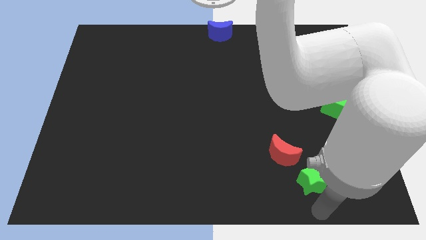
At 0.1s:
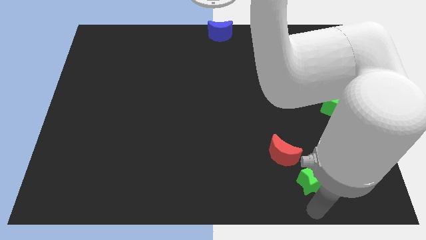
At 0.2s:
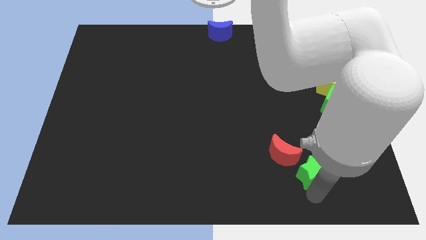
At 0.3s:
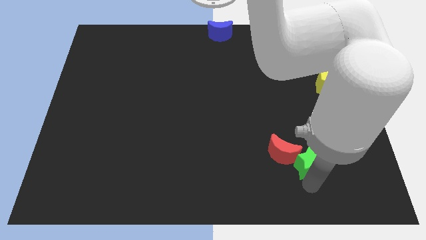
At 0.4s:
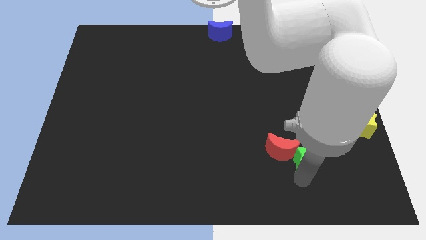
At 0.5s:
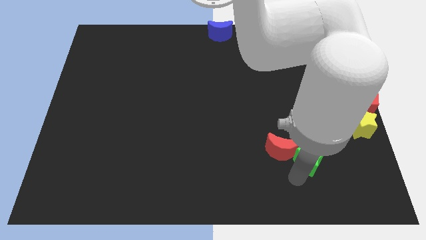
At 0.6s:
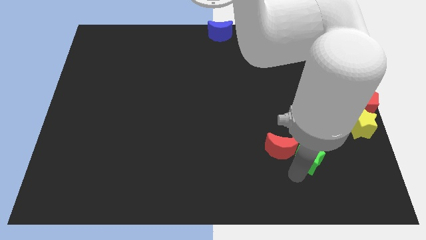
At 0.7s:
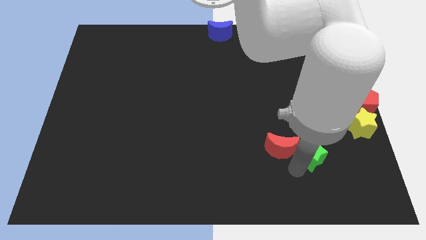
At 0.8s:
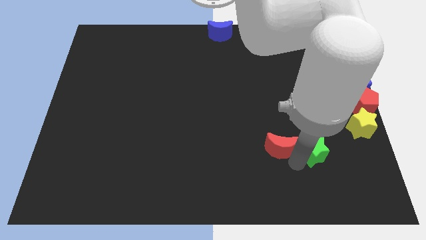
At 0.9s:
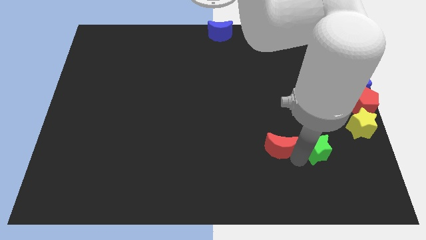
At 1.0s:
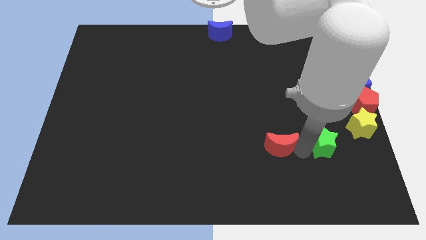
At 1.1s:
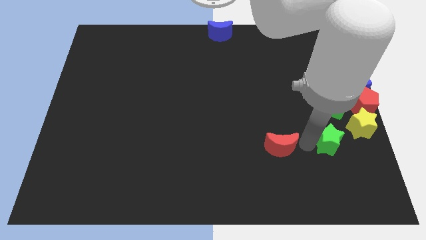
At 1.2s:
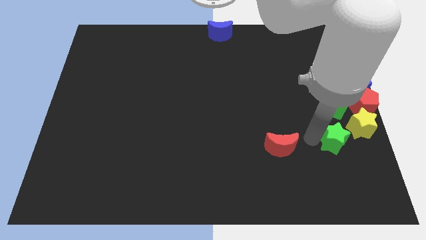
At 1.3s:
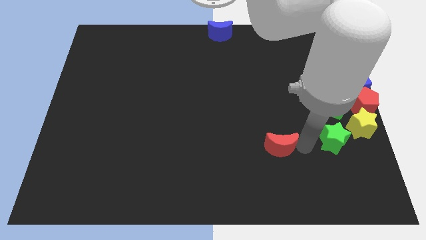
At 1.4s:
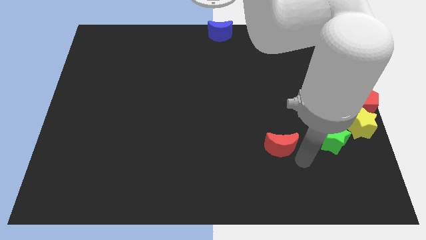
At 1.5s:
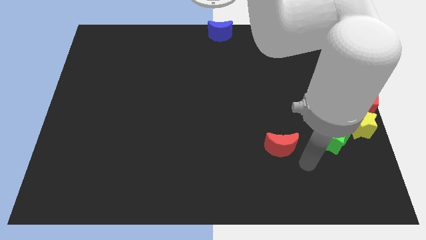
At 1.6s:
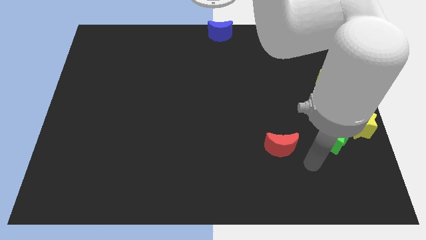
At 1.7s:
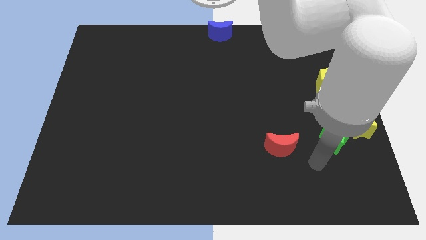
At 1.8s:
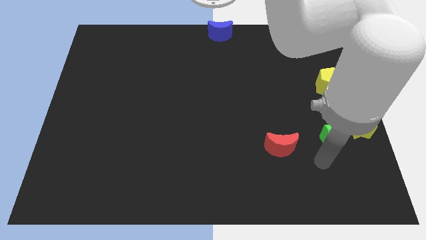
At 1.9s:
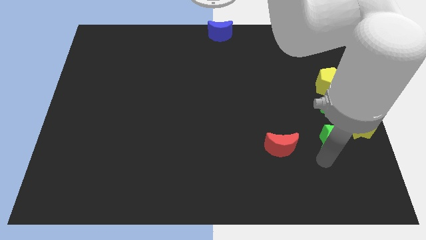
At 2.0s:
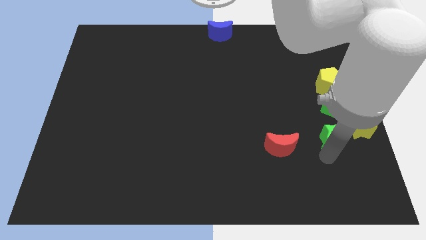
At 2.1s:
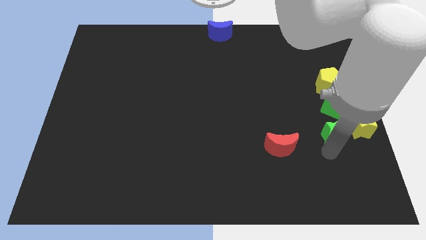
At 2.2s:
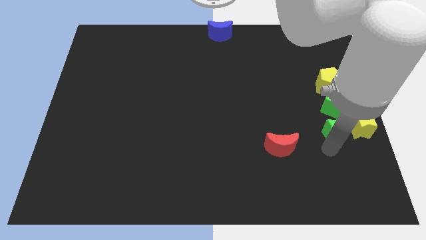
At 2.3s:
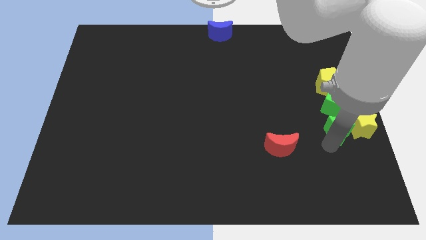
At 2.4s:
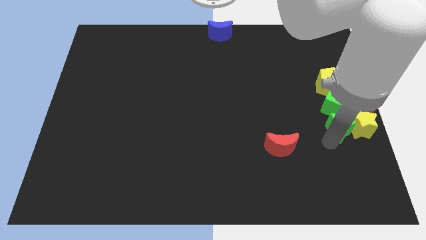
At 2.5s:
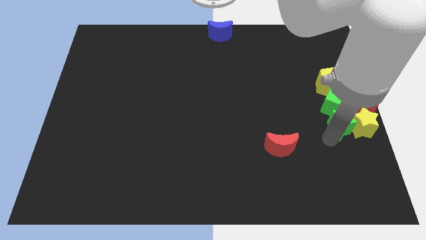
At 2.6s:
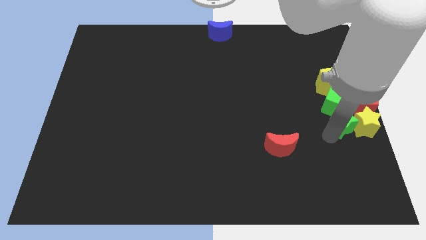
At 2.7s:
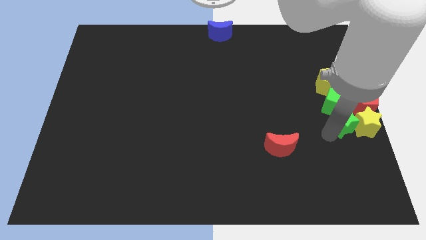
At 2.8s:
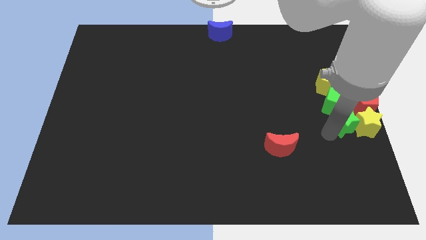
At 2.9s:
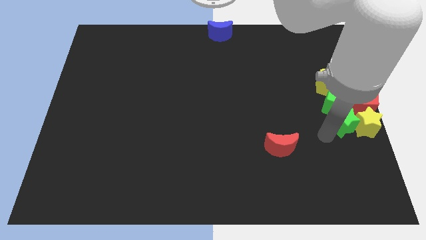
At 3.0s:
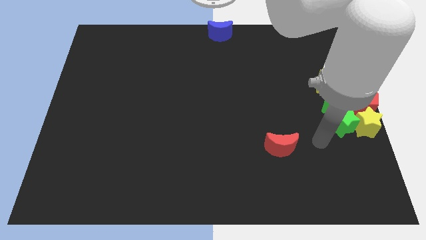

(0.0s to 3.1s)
add green star to the left of yellow star

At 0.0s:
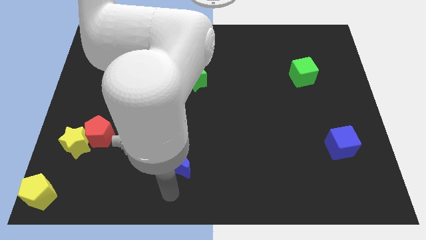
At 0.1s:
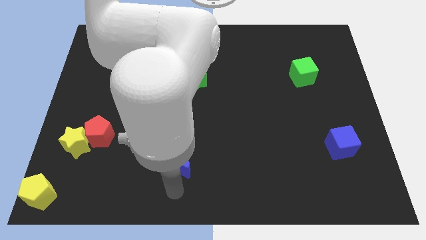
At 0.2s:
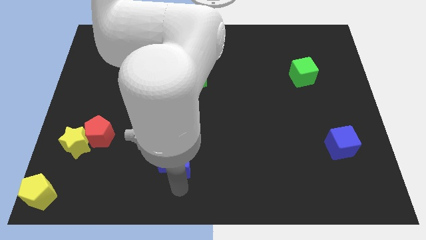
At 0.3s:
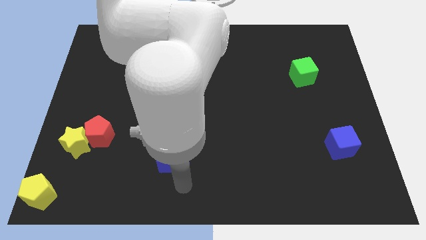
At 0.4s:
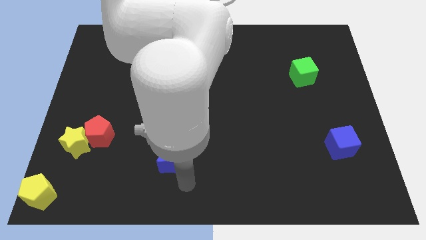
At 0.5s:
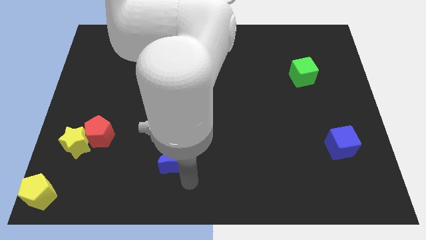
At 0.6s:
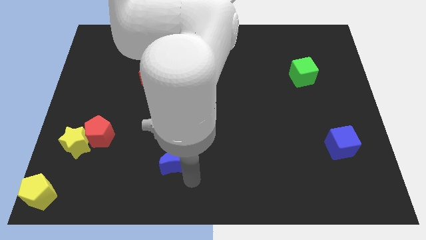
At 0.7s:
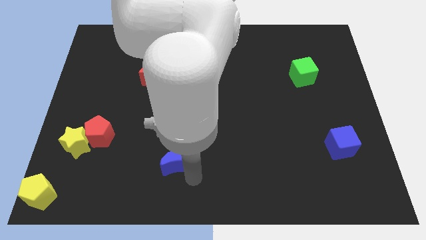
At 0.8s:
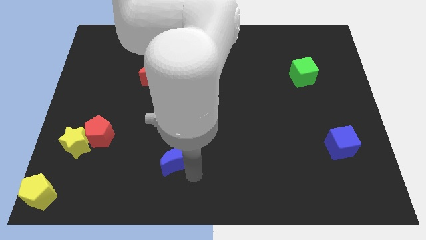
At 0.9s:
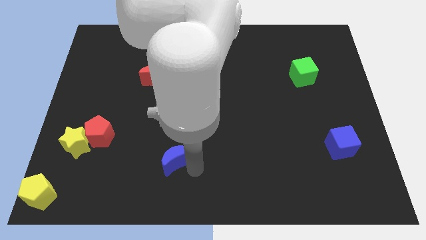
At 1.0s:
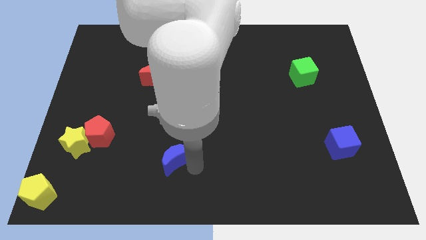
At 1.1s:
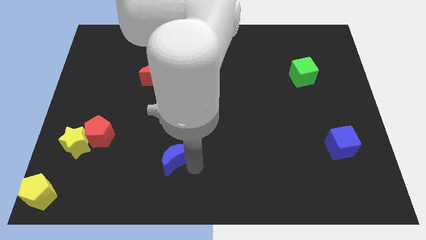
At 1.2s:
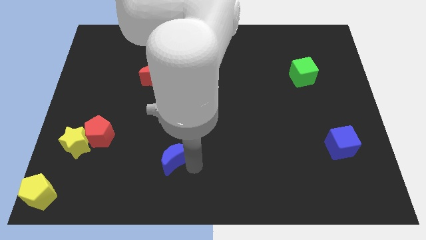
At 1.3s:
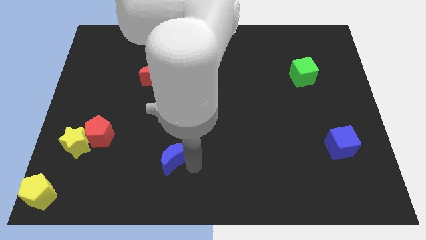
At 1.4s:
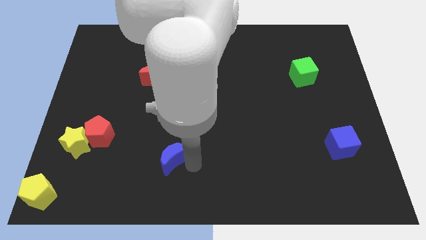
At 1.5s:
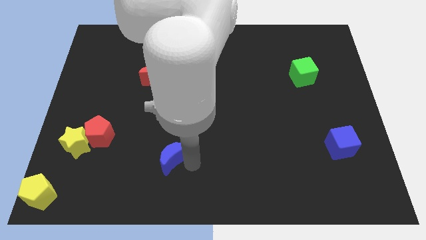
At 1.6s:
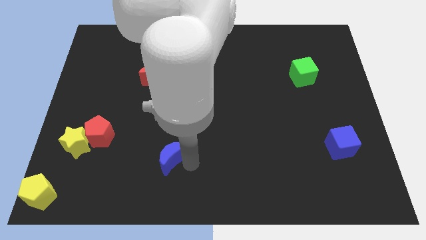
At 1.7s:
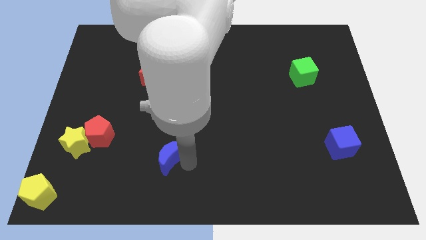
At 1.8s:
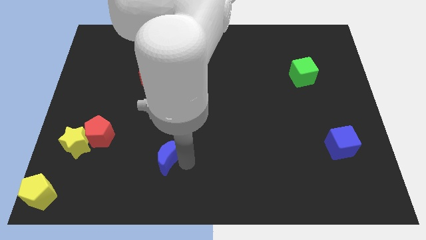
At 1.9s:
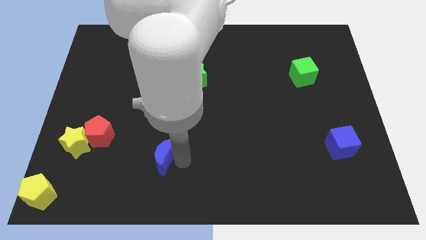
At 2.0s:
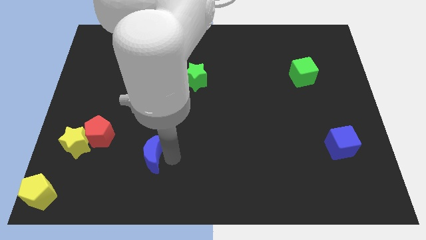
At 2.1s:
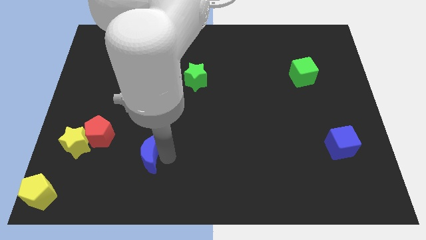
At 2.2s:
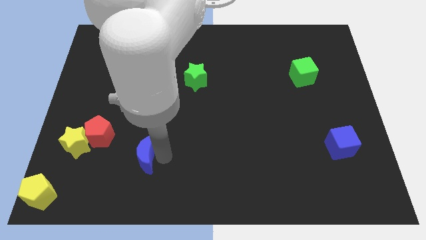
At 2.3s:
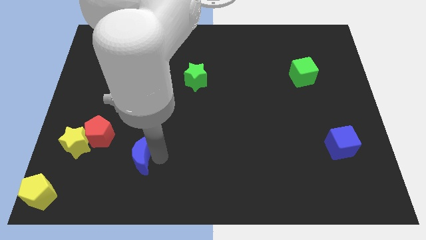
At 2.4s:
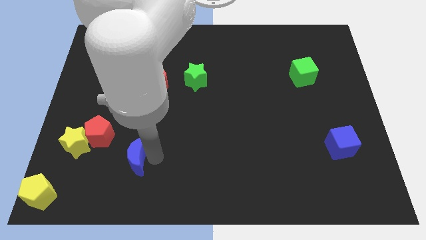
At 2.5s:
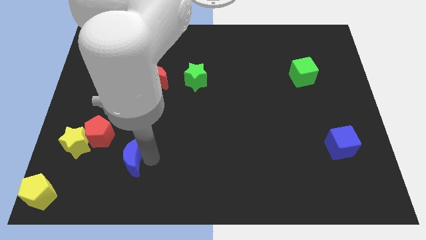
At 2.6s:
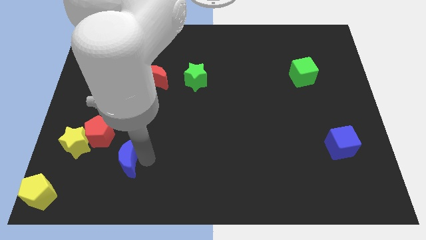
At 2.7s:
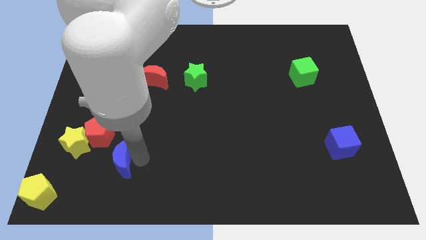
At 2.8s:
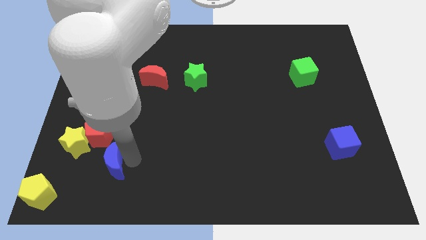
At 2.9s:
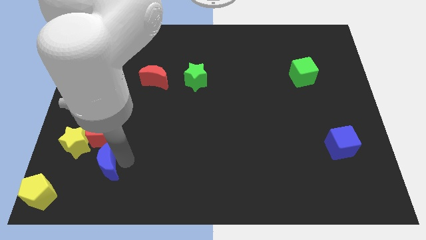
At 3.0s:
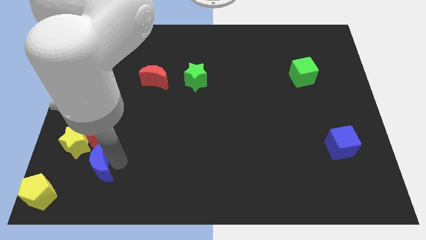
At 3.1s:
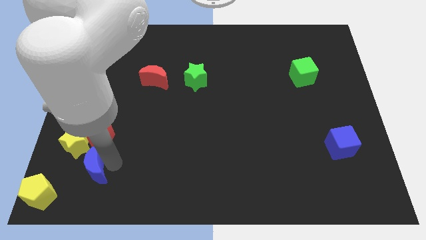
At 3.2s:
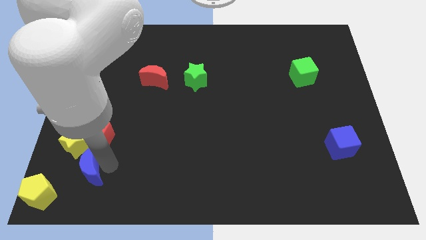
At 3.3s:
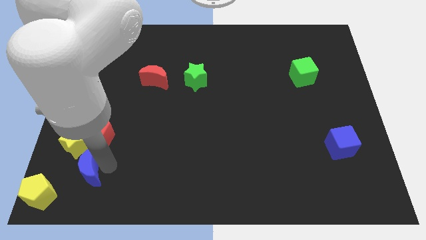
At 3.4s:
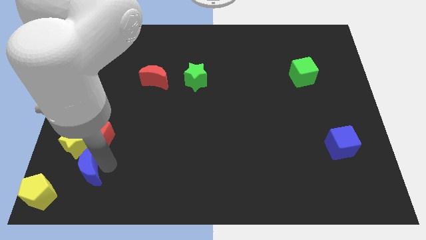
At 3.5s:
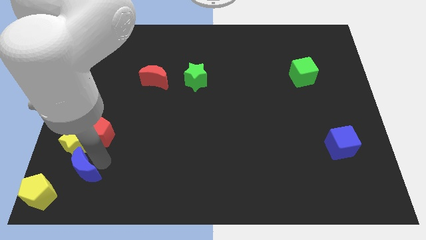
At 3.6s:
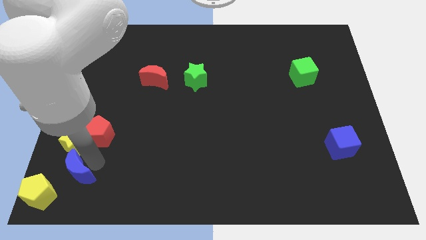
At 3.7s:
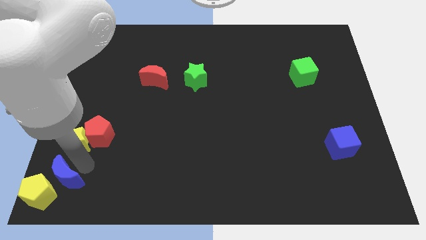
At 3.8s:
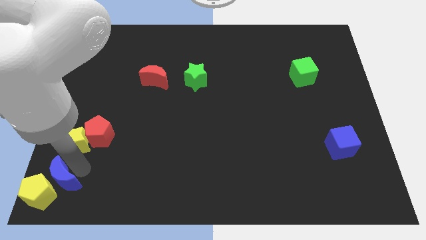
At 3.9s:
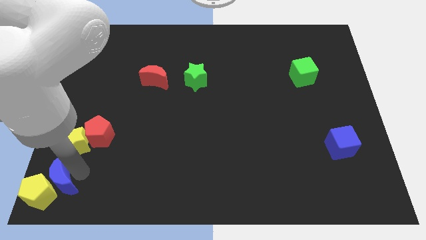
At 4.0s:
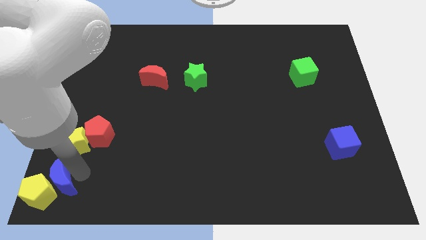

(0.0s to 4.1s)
move the blue crescent to the top right of the yellow pentagon

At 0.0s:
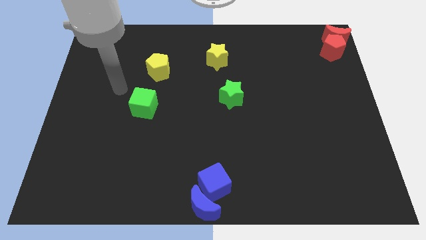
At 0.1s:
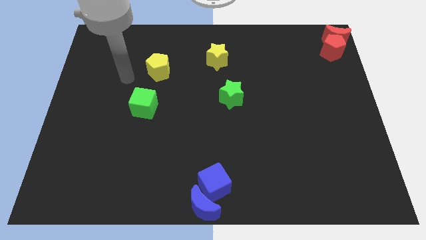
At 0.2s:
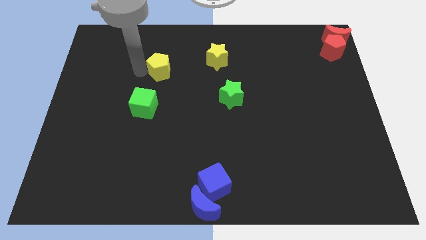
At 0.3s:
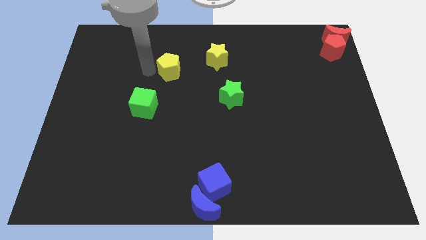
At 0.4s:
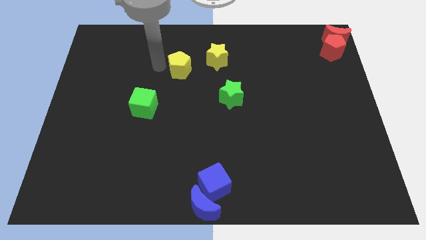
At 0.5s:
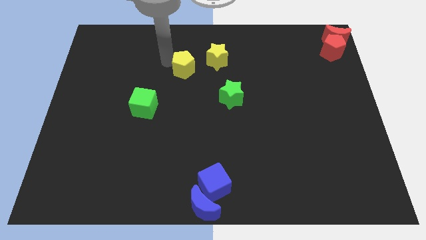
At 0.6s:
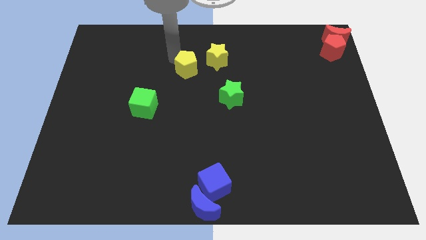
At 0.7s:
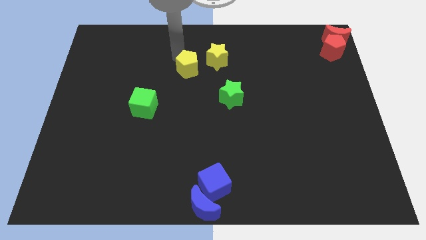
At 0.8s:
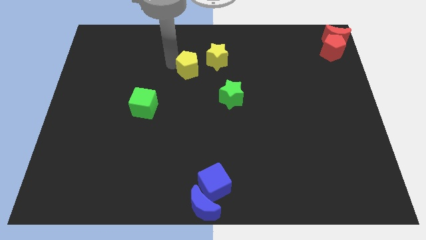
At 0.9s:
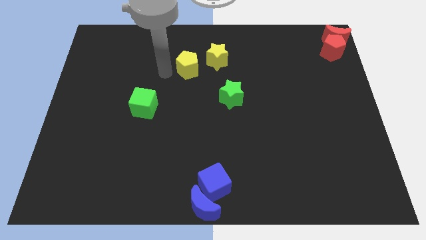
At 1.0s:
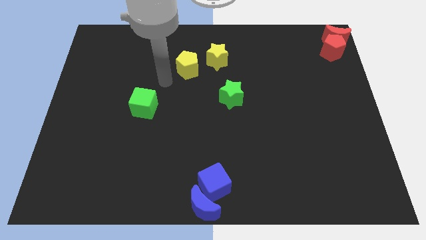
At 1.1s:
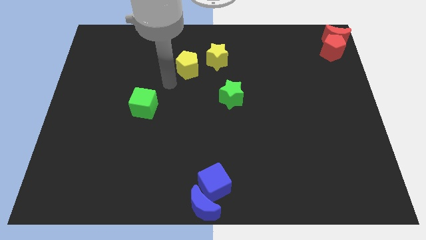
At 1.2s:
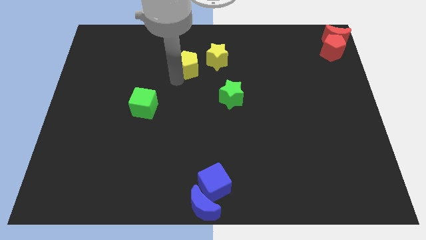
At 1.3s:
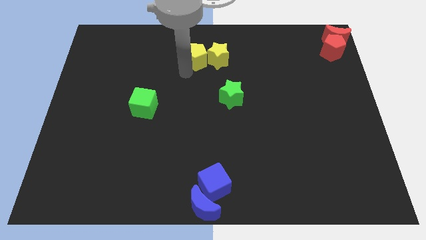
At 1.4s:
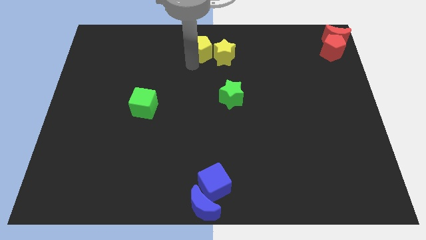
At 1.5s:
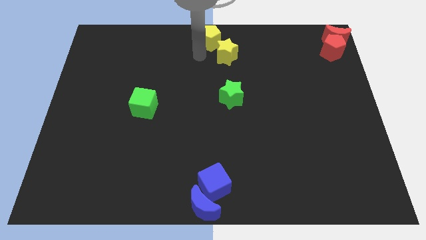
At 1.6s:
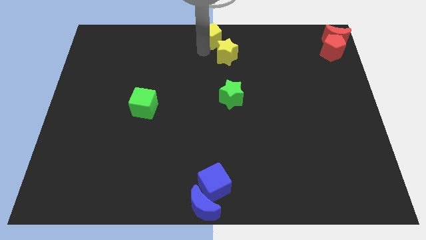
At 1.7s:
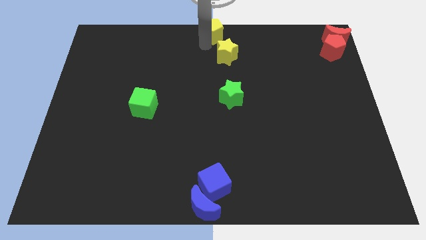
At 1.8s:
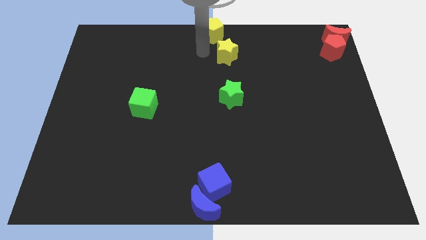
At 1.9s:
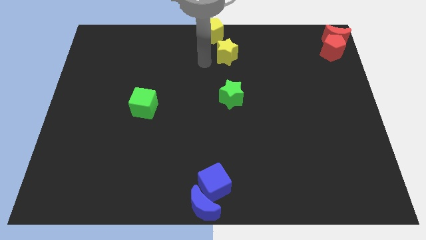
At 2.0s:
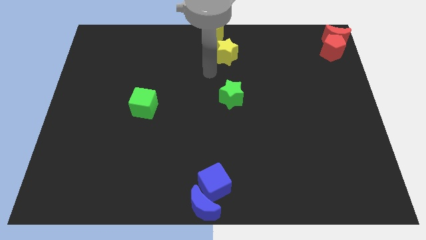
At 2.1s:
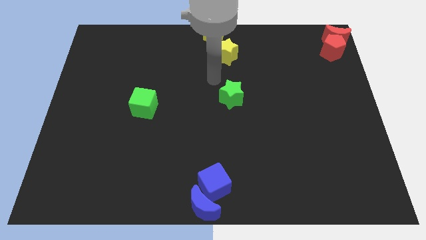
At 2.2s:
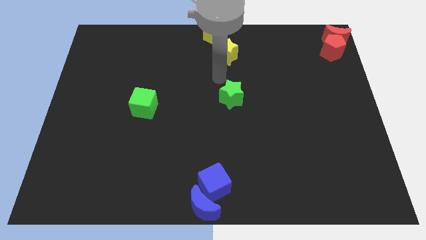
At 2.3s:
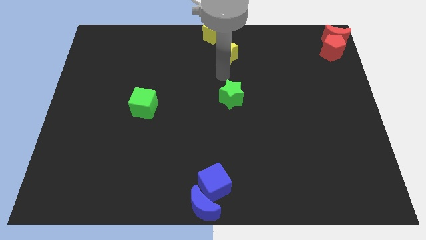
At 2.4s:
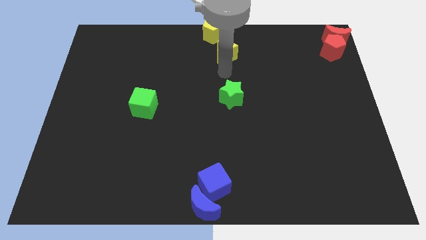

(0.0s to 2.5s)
move the yellow pentagon top center of the board
